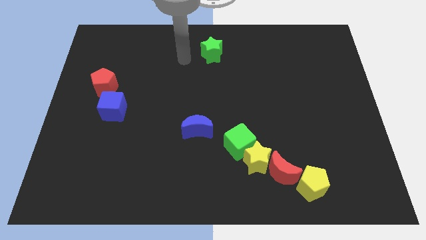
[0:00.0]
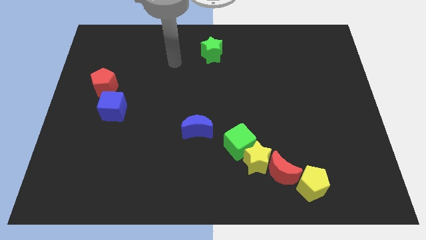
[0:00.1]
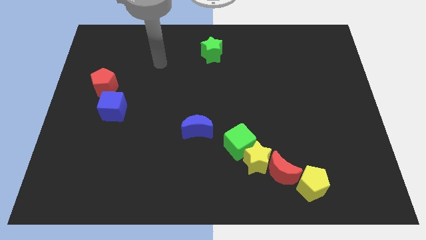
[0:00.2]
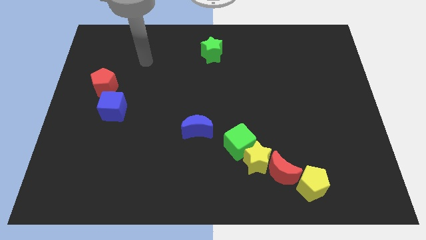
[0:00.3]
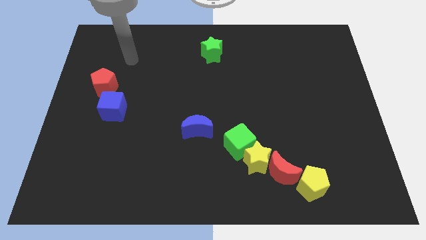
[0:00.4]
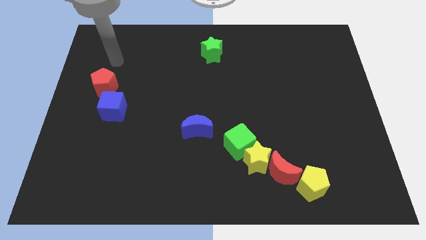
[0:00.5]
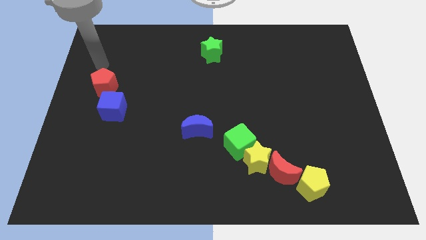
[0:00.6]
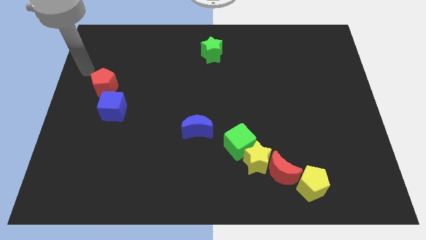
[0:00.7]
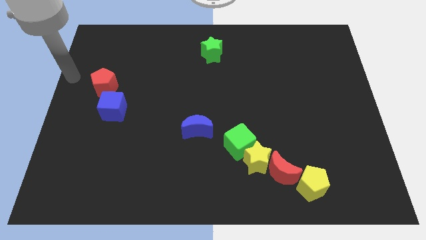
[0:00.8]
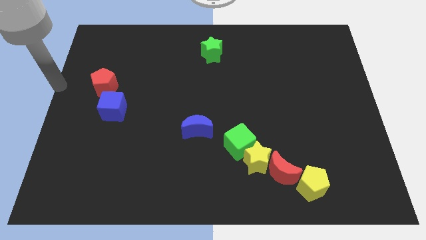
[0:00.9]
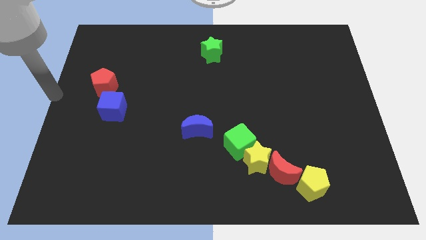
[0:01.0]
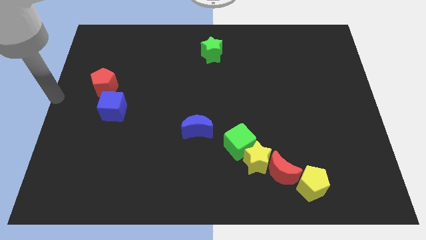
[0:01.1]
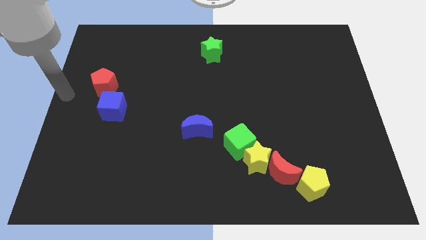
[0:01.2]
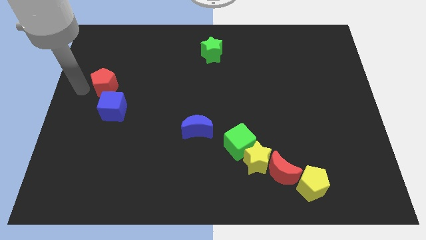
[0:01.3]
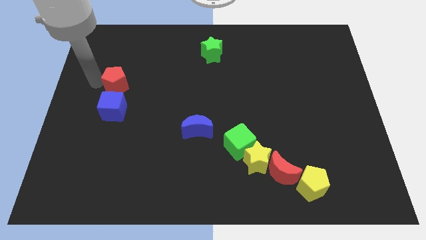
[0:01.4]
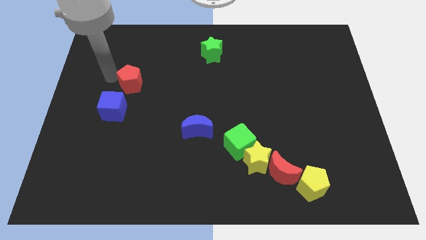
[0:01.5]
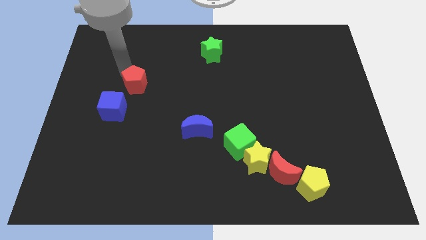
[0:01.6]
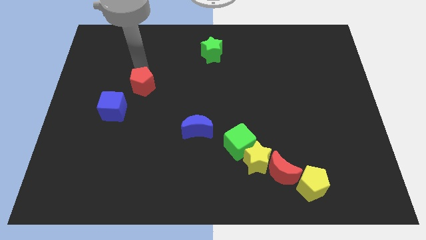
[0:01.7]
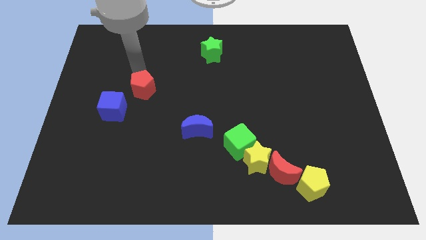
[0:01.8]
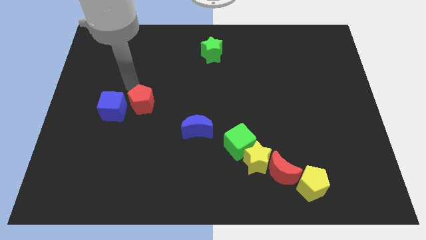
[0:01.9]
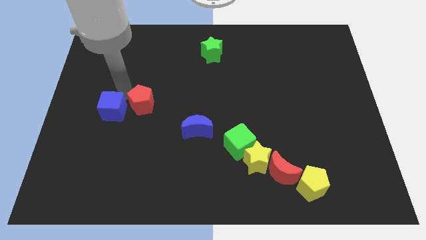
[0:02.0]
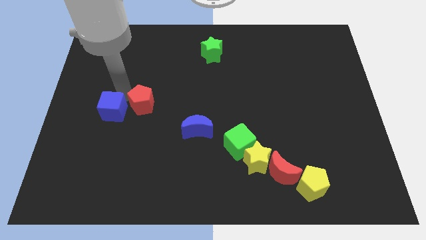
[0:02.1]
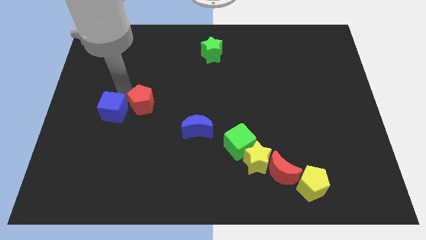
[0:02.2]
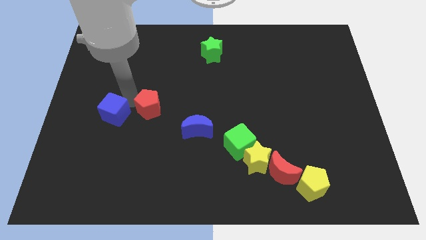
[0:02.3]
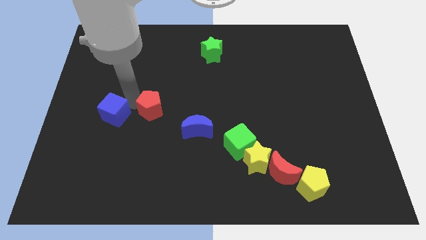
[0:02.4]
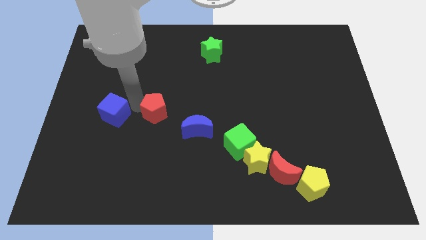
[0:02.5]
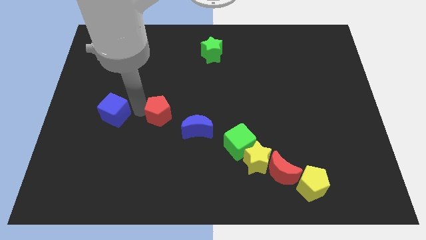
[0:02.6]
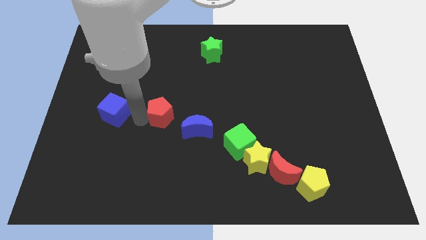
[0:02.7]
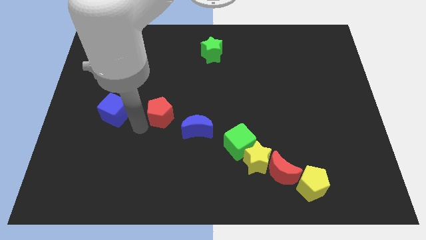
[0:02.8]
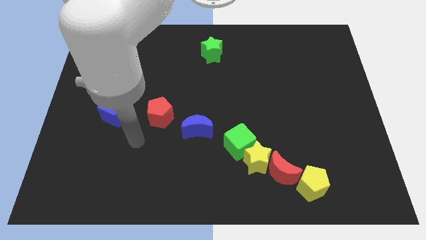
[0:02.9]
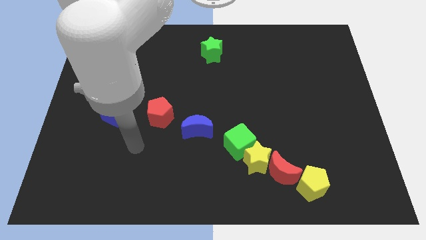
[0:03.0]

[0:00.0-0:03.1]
place the red pentagon in between the blue moon and the blue cube

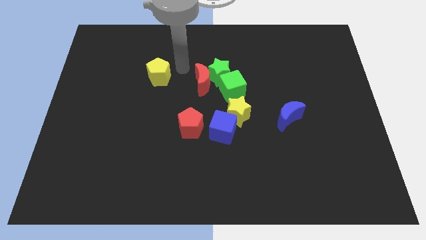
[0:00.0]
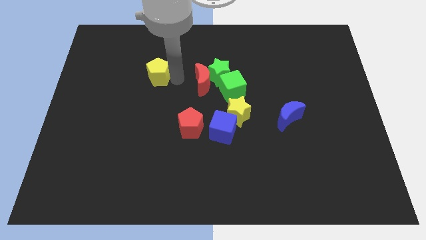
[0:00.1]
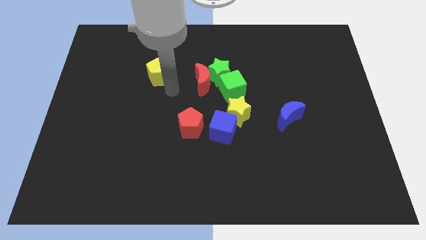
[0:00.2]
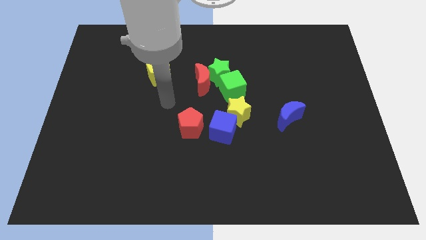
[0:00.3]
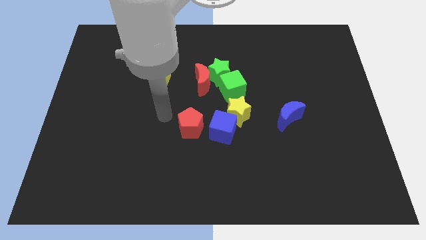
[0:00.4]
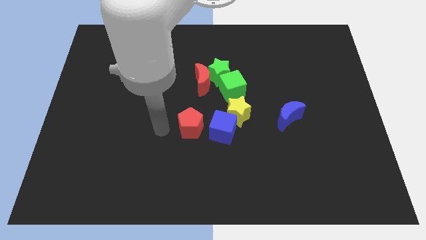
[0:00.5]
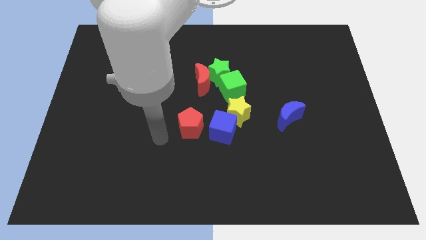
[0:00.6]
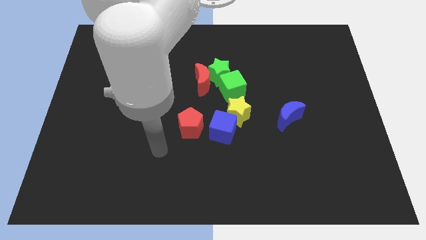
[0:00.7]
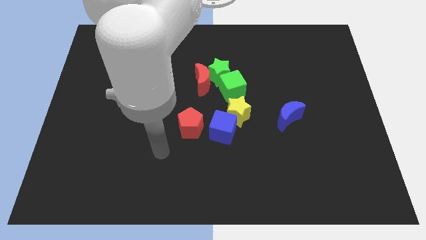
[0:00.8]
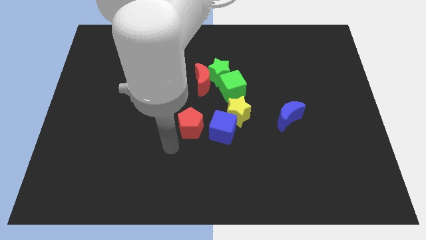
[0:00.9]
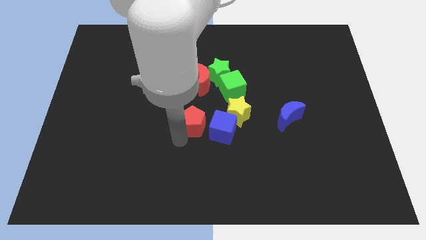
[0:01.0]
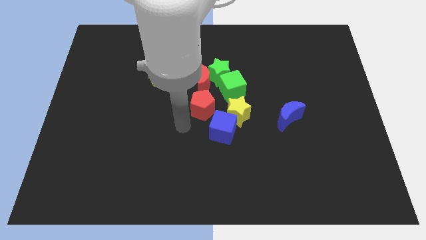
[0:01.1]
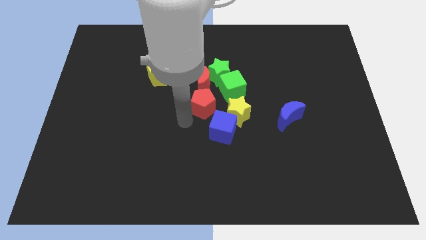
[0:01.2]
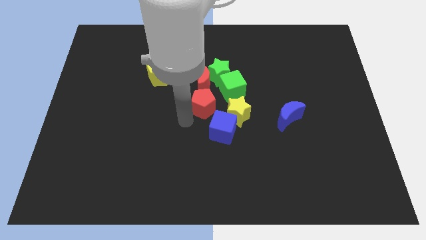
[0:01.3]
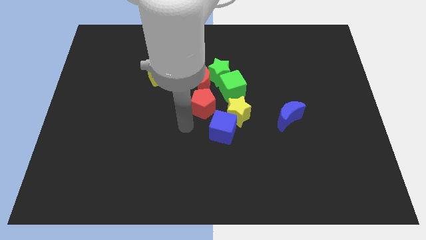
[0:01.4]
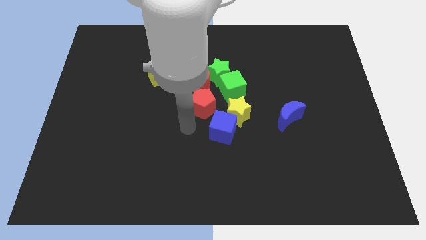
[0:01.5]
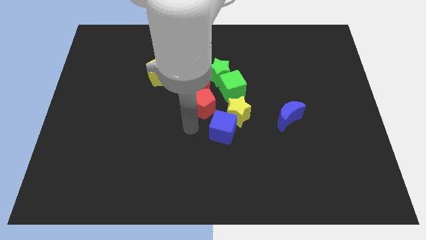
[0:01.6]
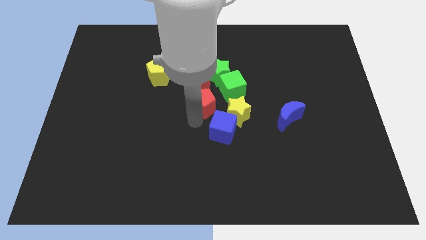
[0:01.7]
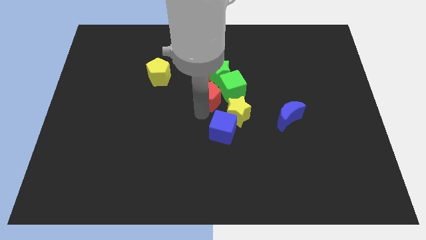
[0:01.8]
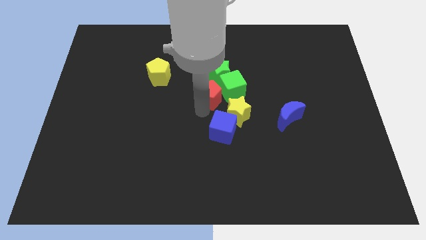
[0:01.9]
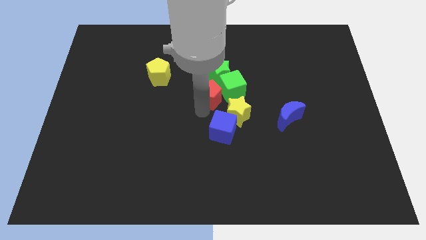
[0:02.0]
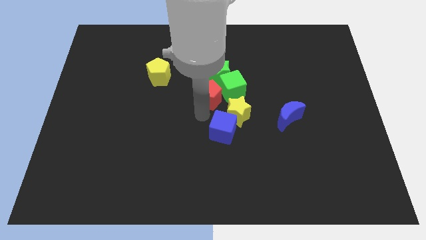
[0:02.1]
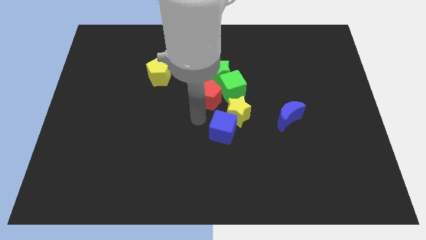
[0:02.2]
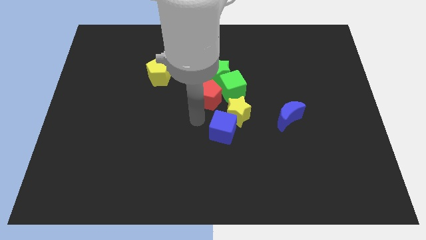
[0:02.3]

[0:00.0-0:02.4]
push the red pentagon to the left of the green cube

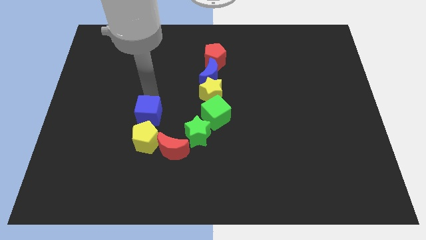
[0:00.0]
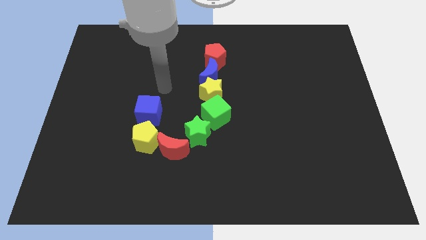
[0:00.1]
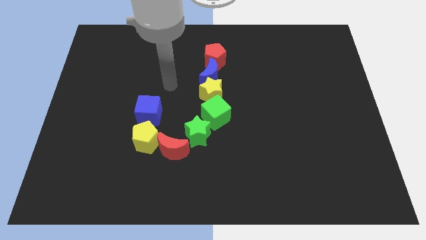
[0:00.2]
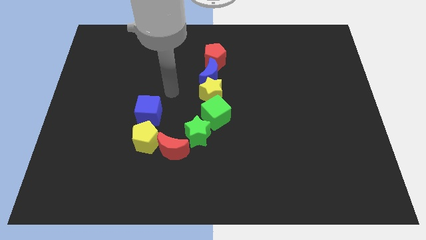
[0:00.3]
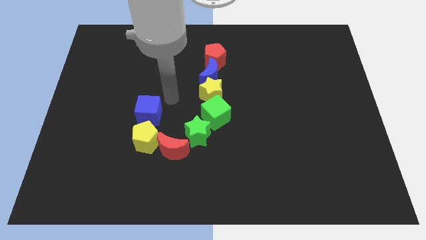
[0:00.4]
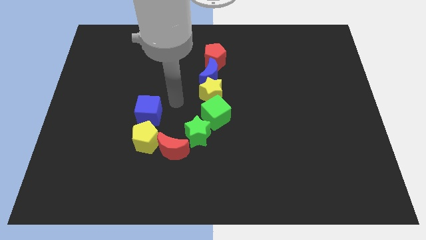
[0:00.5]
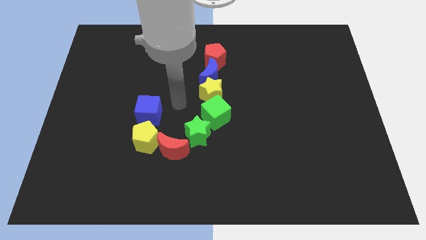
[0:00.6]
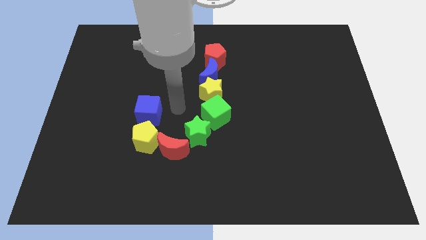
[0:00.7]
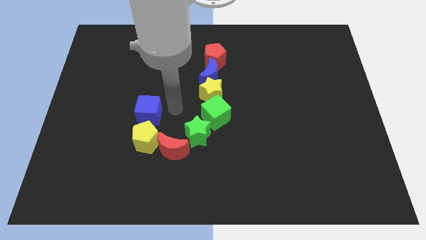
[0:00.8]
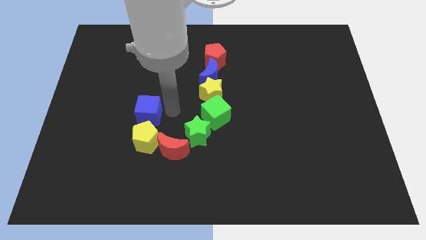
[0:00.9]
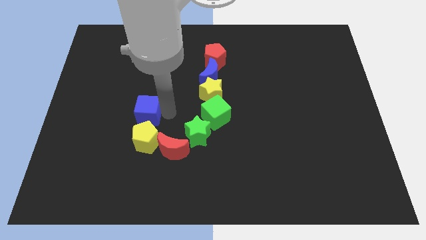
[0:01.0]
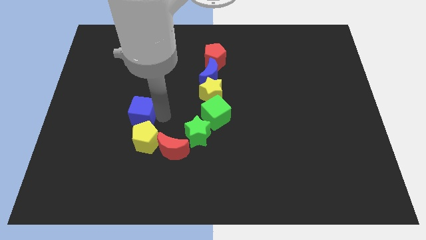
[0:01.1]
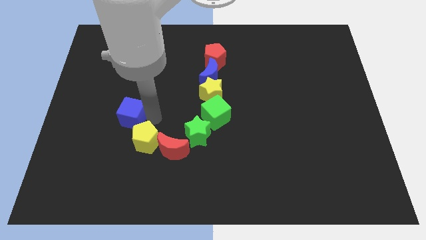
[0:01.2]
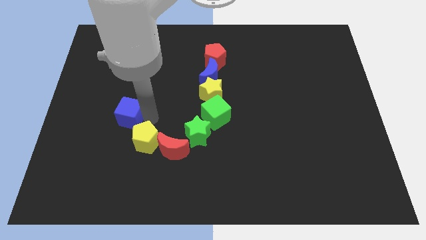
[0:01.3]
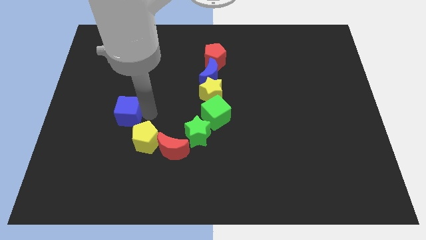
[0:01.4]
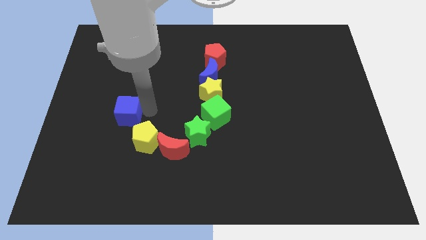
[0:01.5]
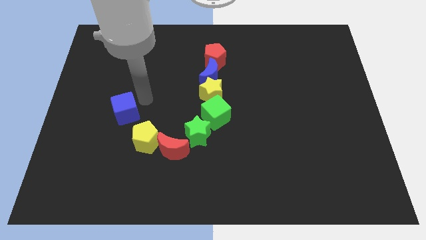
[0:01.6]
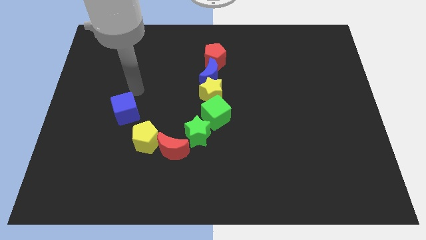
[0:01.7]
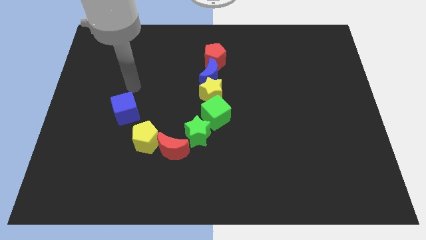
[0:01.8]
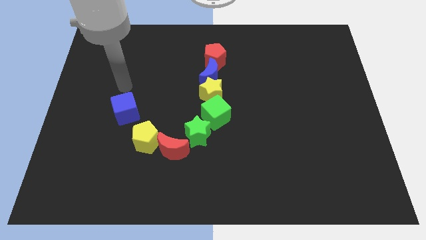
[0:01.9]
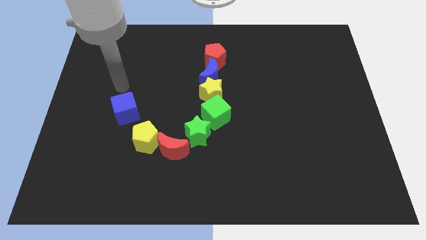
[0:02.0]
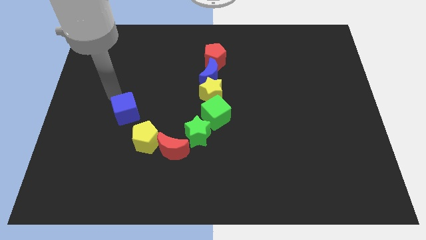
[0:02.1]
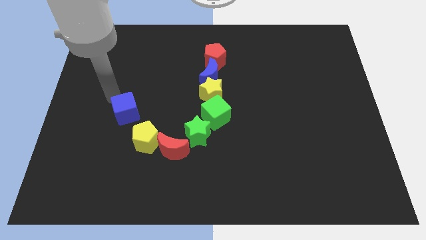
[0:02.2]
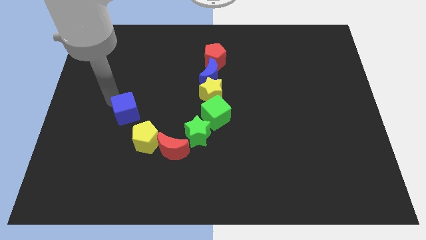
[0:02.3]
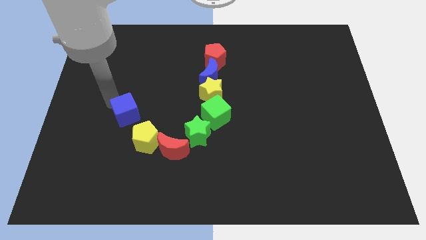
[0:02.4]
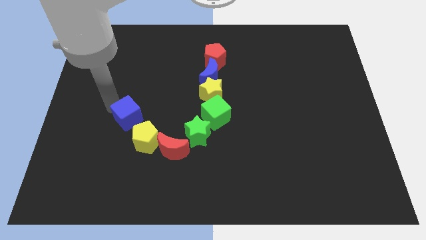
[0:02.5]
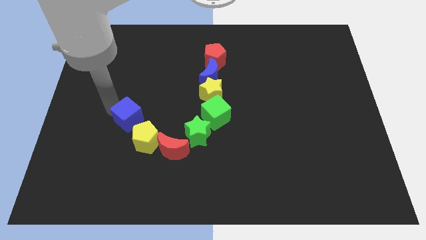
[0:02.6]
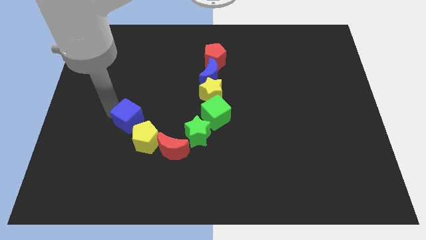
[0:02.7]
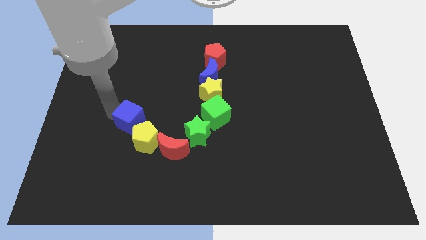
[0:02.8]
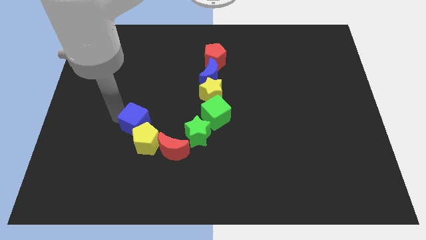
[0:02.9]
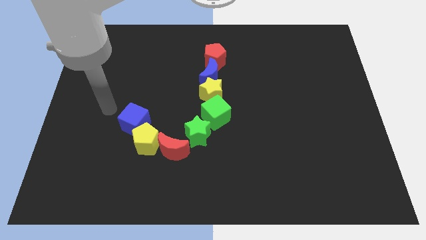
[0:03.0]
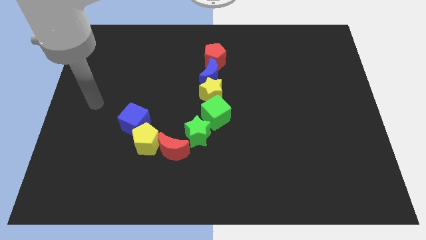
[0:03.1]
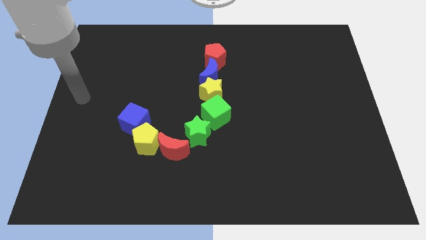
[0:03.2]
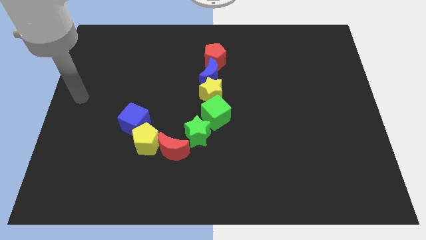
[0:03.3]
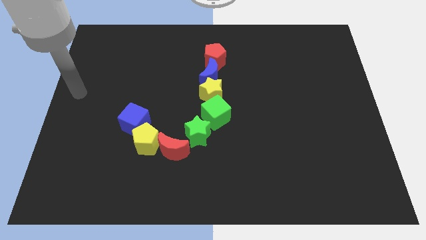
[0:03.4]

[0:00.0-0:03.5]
move the blue cube into the top left of yellow pentagon
